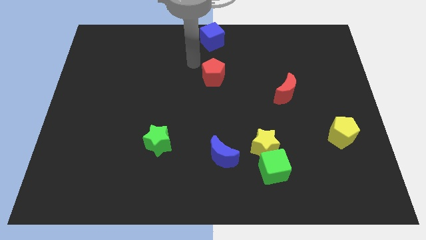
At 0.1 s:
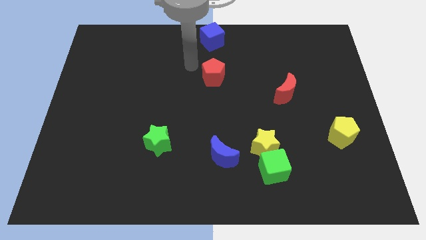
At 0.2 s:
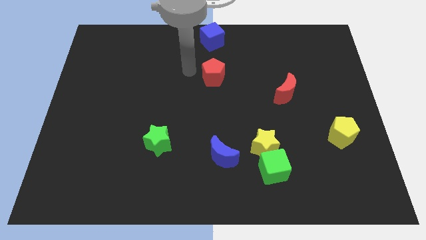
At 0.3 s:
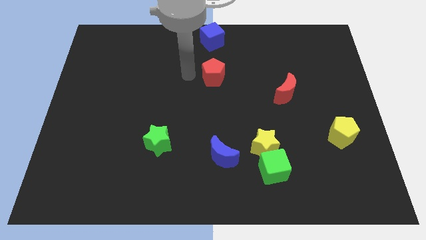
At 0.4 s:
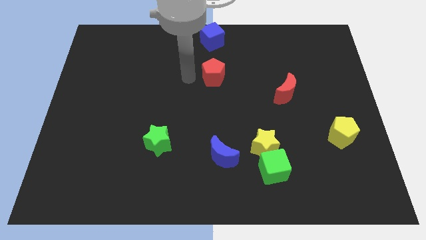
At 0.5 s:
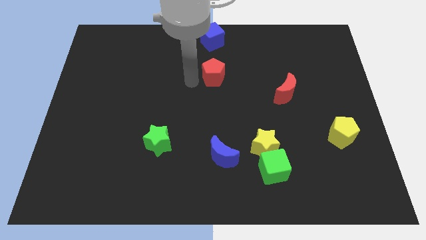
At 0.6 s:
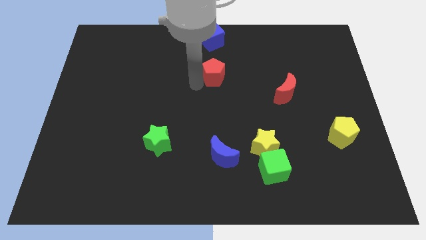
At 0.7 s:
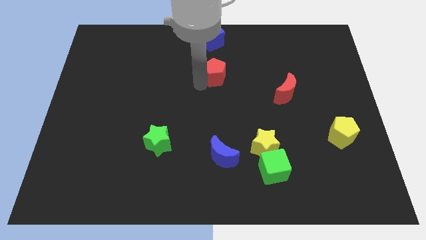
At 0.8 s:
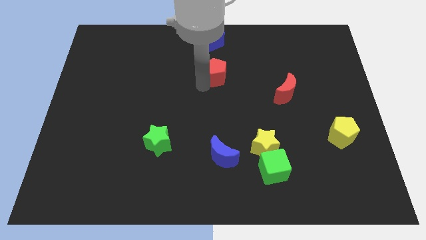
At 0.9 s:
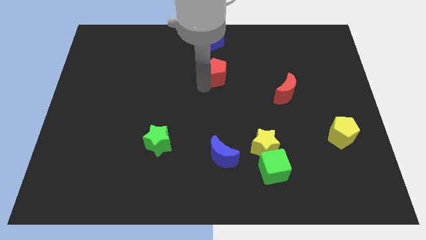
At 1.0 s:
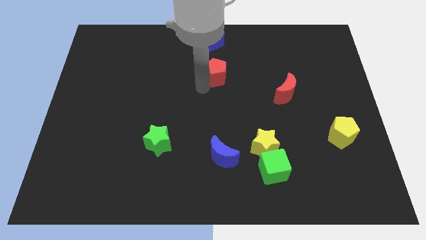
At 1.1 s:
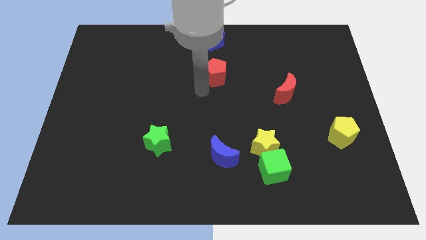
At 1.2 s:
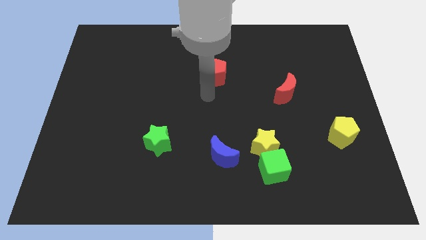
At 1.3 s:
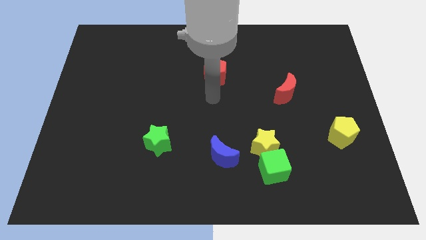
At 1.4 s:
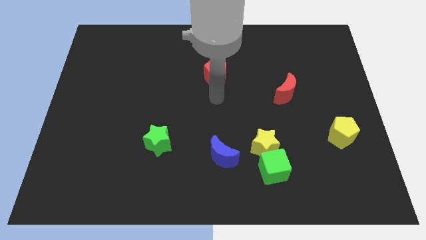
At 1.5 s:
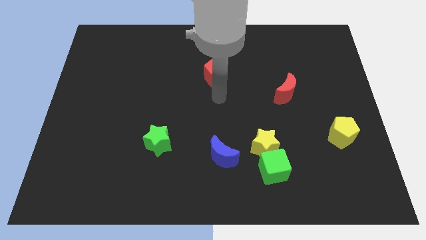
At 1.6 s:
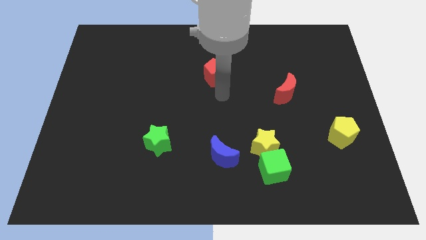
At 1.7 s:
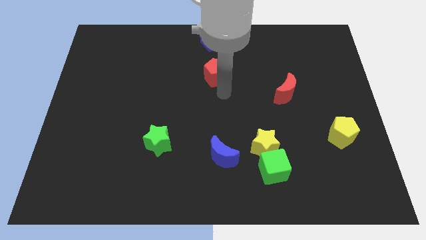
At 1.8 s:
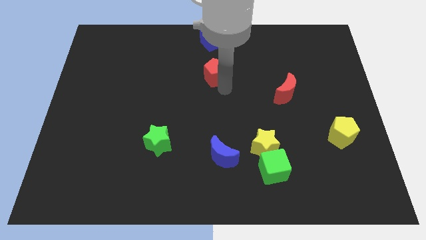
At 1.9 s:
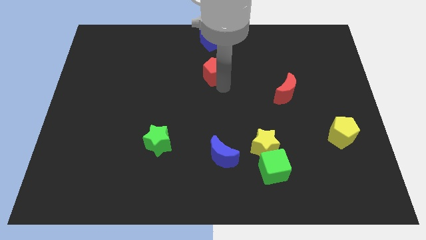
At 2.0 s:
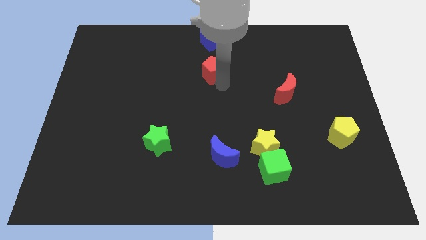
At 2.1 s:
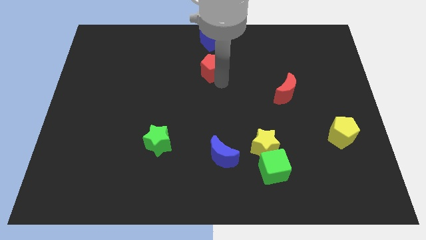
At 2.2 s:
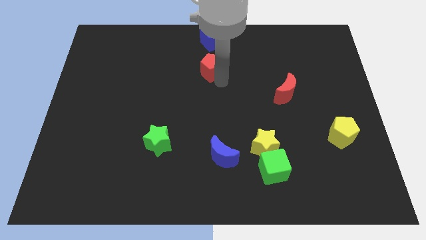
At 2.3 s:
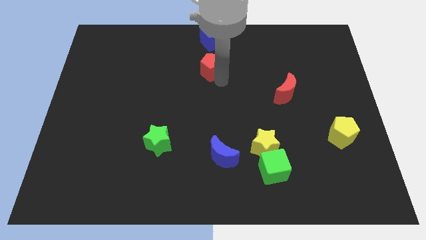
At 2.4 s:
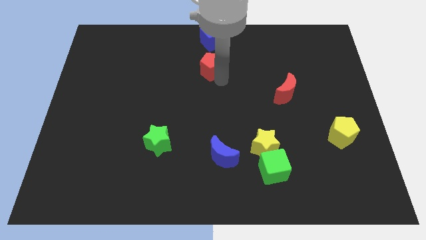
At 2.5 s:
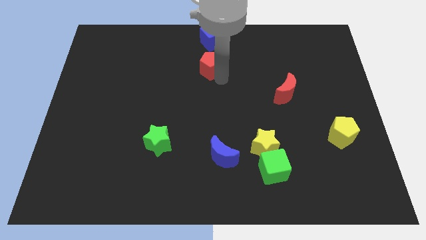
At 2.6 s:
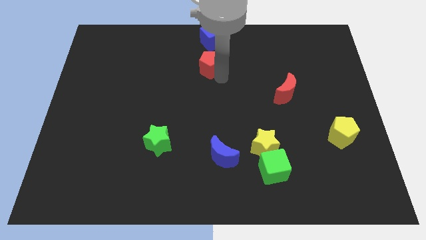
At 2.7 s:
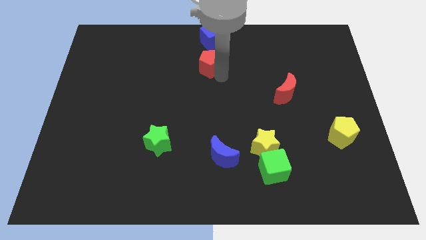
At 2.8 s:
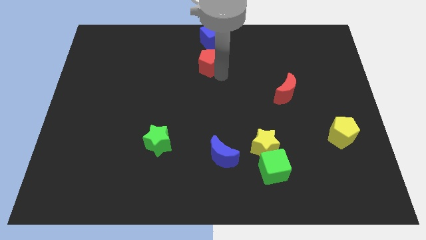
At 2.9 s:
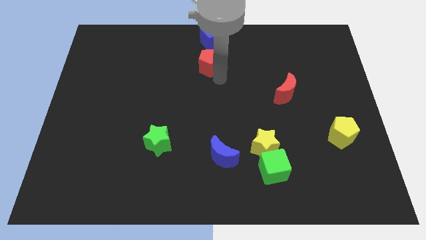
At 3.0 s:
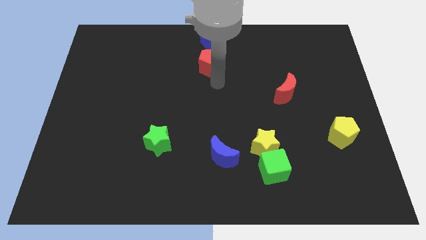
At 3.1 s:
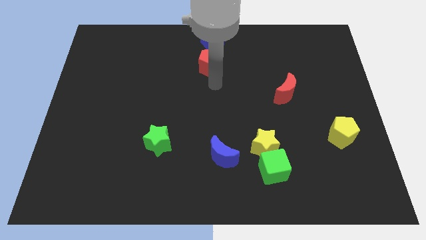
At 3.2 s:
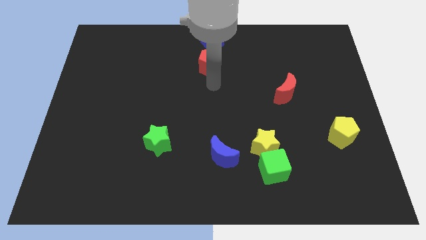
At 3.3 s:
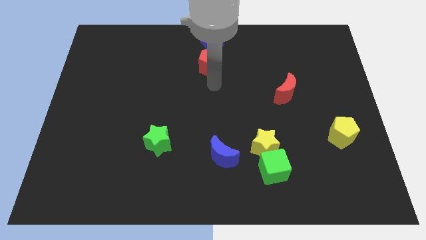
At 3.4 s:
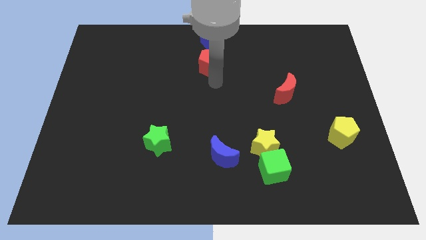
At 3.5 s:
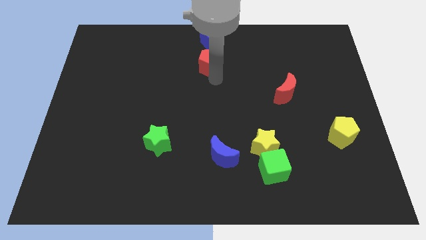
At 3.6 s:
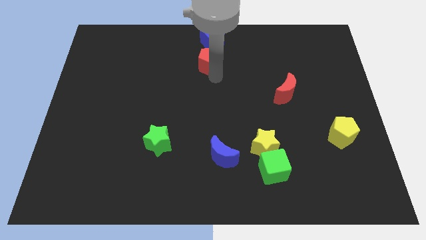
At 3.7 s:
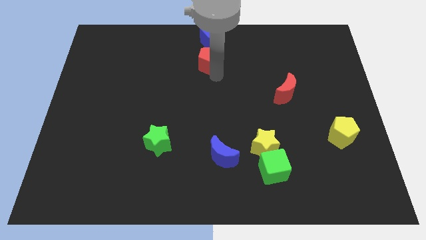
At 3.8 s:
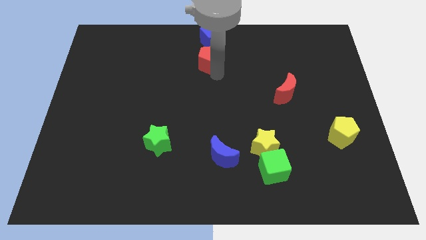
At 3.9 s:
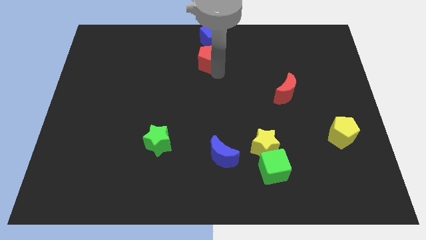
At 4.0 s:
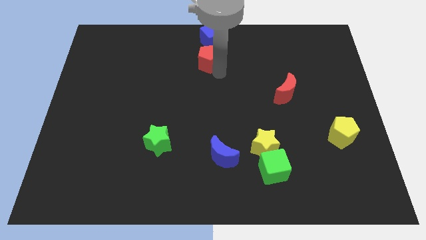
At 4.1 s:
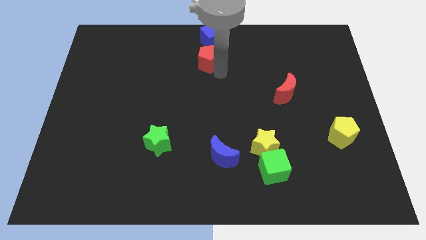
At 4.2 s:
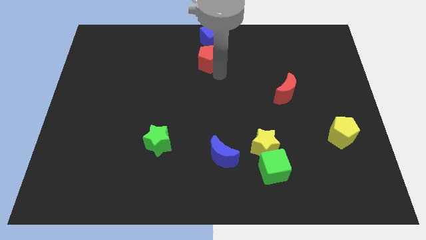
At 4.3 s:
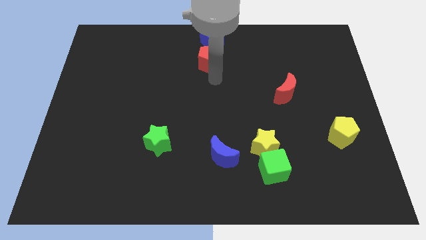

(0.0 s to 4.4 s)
push the red pentagon slightly towards top

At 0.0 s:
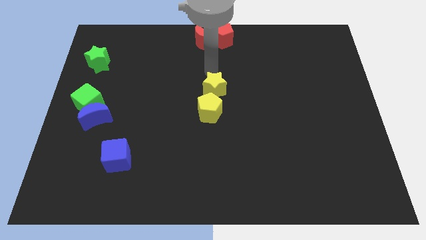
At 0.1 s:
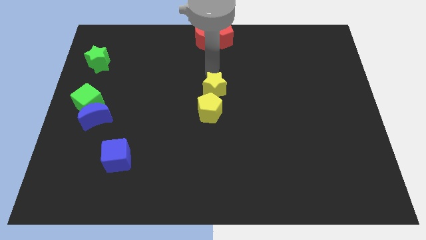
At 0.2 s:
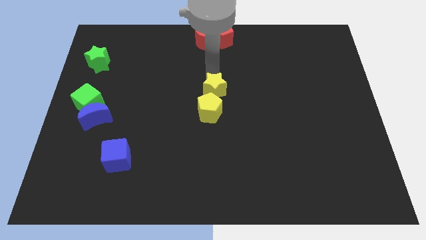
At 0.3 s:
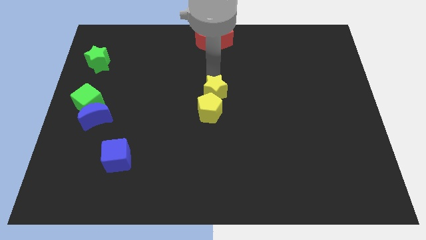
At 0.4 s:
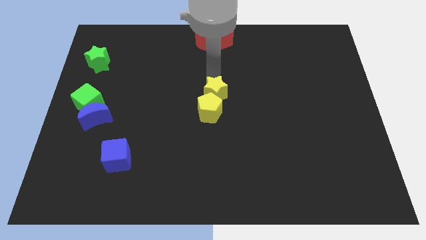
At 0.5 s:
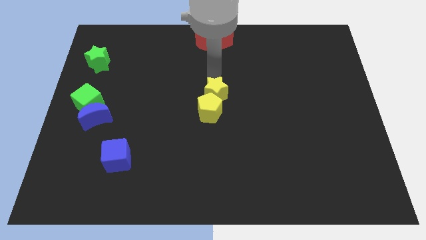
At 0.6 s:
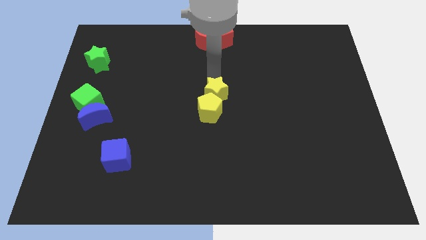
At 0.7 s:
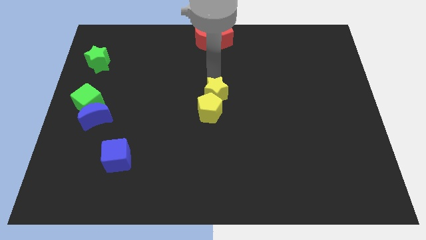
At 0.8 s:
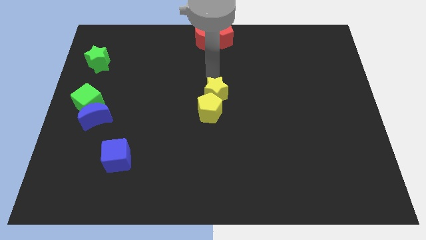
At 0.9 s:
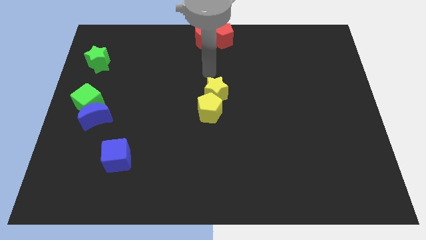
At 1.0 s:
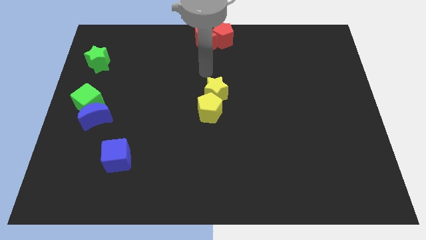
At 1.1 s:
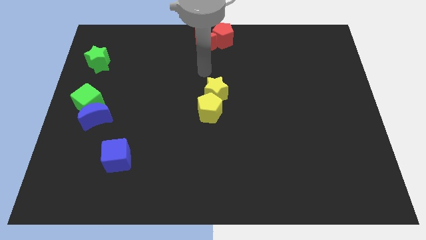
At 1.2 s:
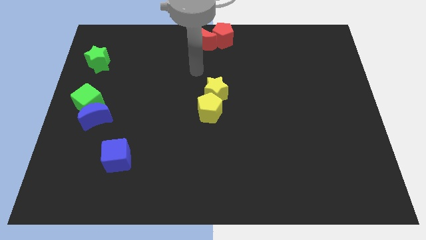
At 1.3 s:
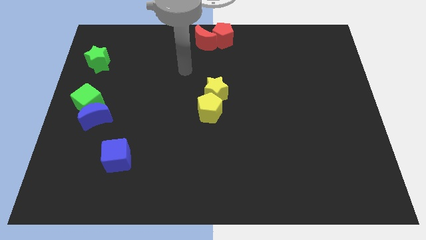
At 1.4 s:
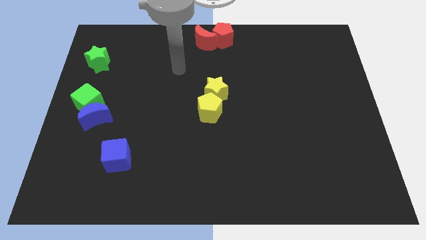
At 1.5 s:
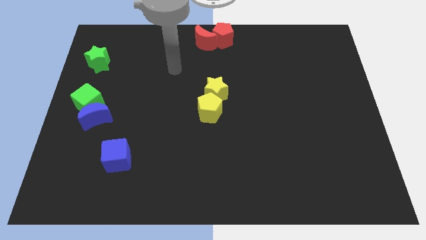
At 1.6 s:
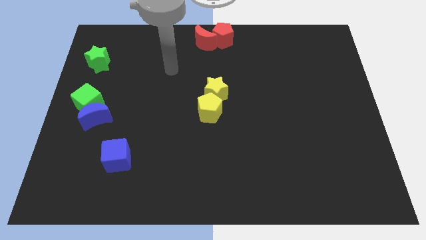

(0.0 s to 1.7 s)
slightly push the yellow star into the yellow pentagon from the top

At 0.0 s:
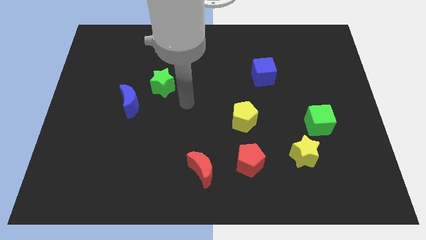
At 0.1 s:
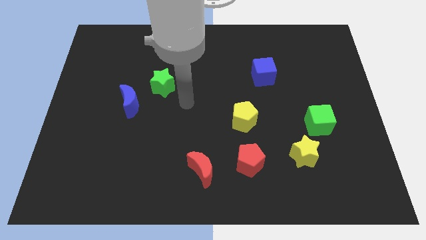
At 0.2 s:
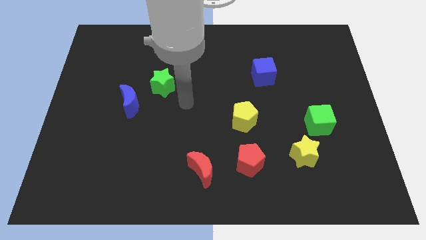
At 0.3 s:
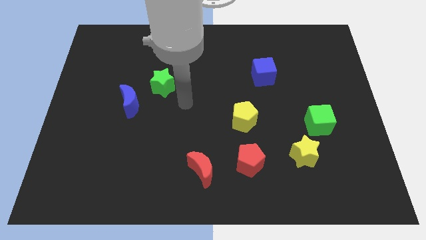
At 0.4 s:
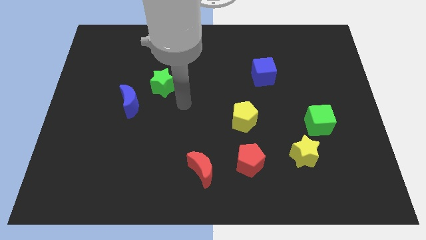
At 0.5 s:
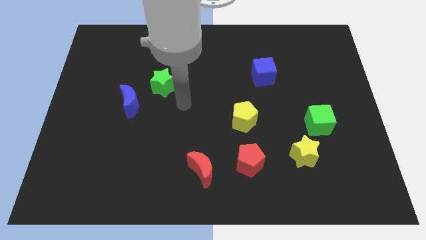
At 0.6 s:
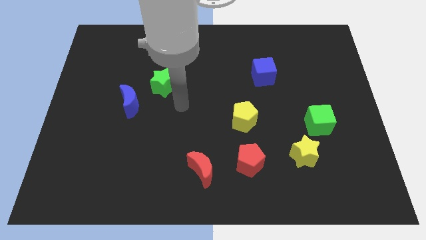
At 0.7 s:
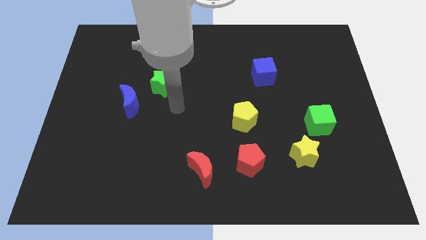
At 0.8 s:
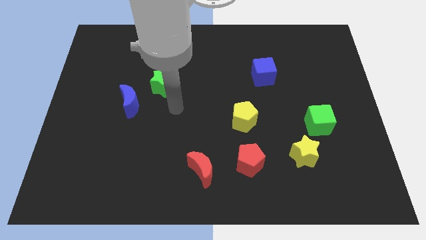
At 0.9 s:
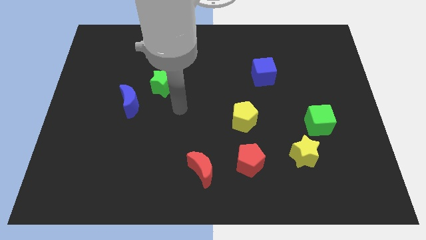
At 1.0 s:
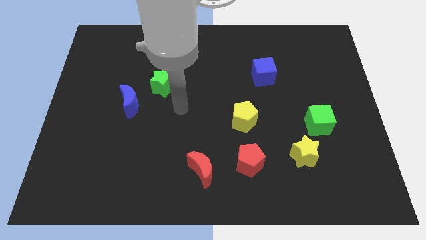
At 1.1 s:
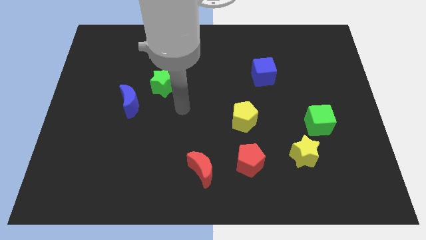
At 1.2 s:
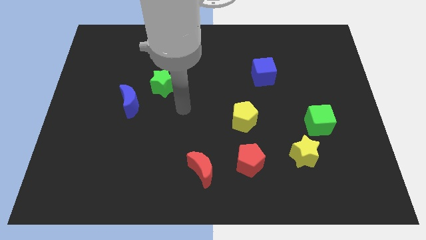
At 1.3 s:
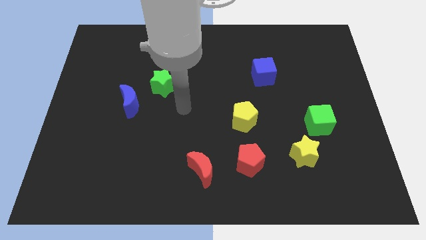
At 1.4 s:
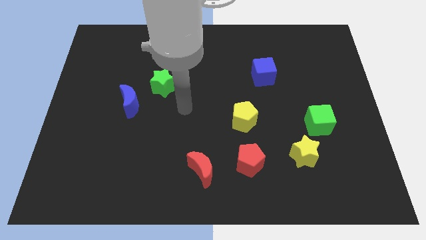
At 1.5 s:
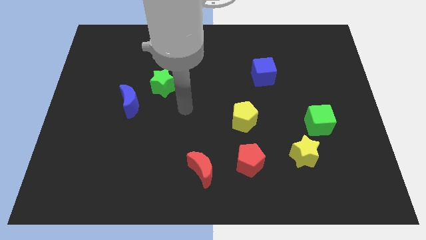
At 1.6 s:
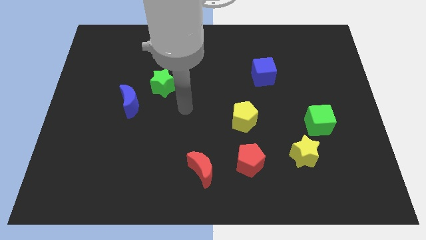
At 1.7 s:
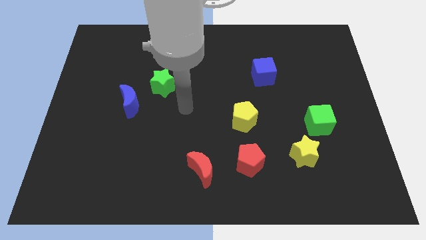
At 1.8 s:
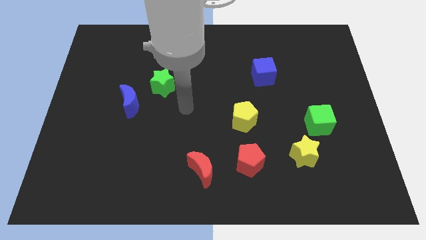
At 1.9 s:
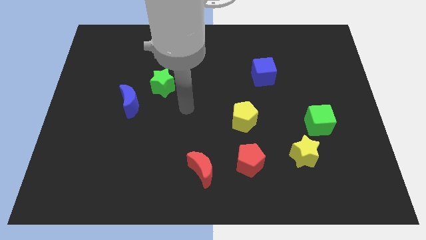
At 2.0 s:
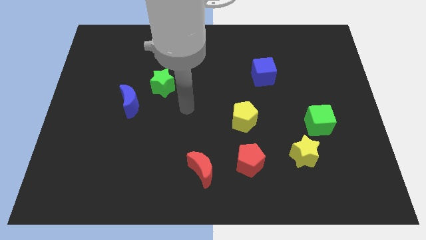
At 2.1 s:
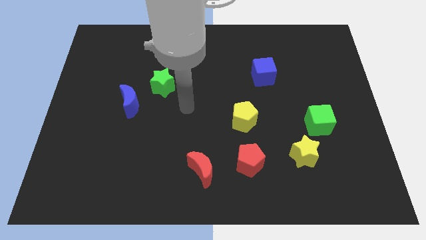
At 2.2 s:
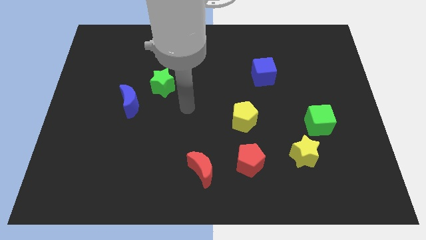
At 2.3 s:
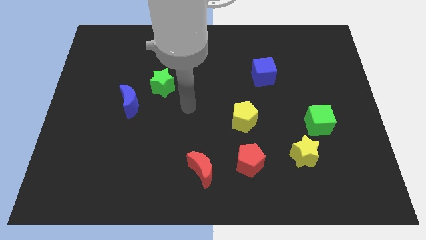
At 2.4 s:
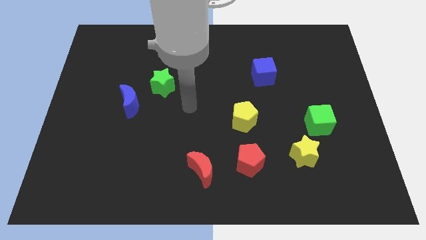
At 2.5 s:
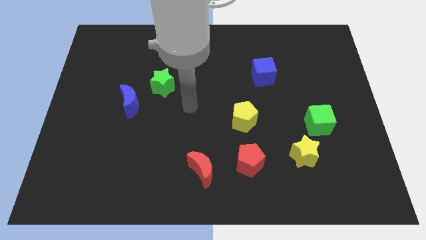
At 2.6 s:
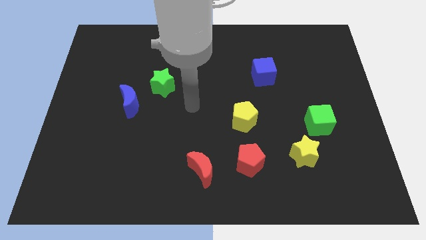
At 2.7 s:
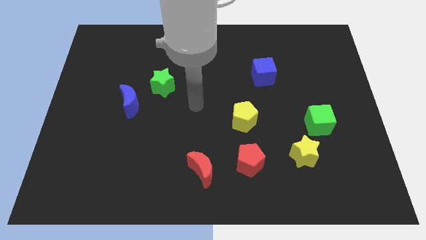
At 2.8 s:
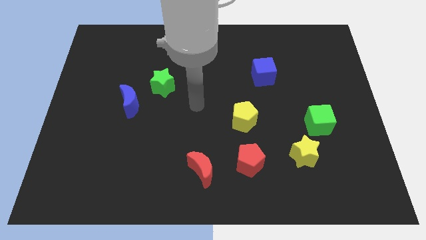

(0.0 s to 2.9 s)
move the arm slightly towards the yellow pentagon
